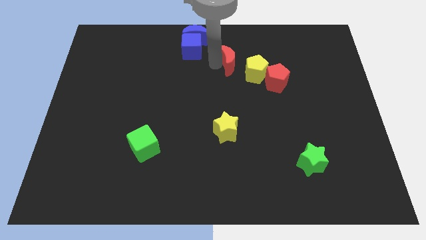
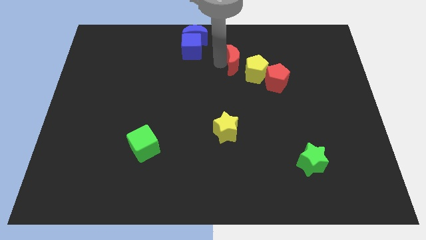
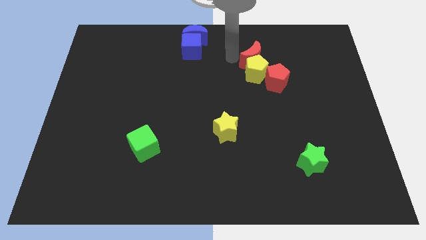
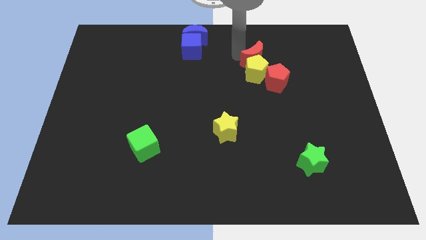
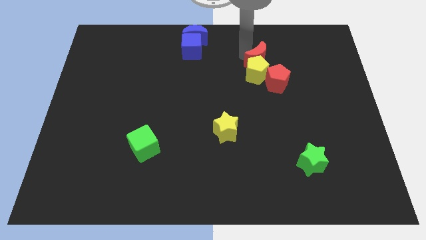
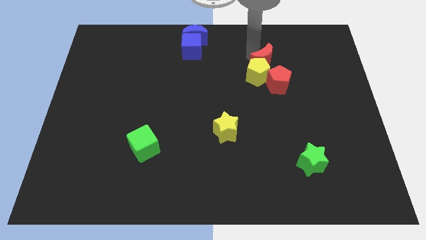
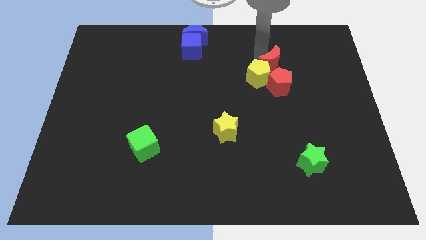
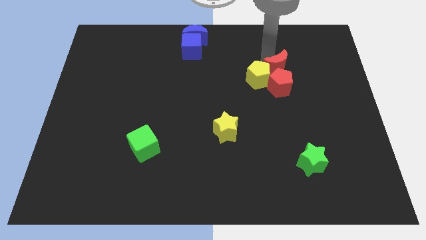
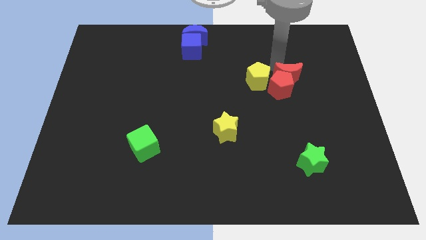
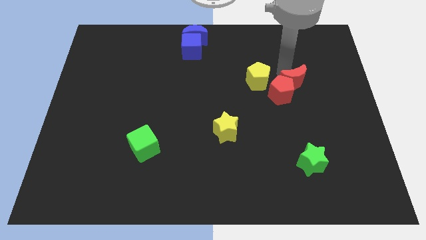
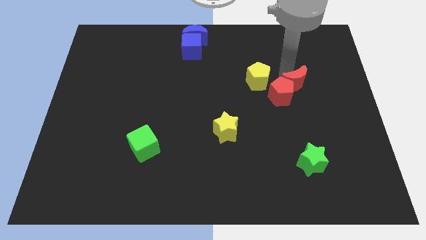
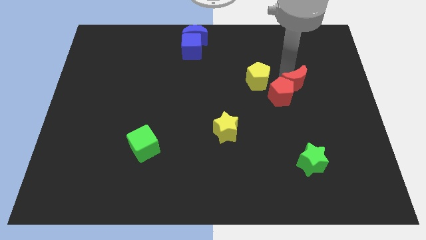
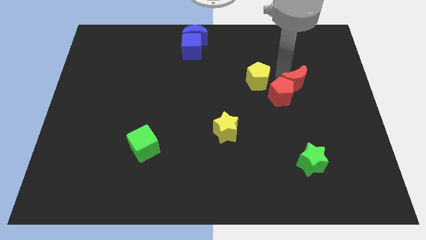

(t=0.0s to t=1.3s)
place the red crescent close to red pentagon

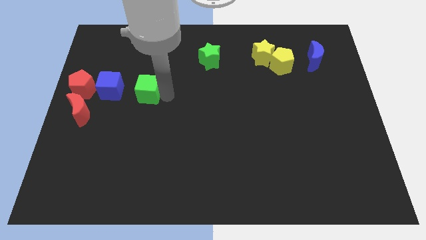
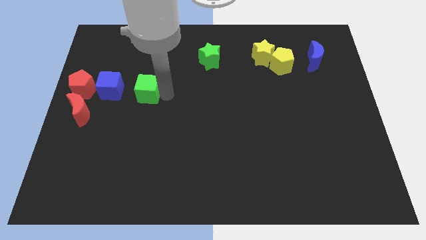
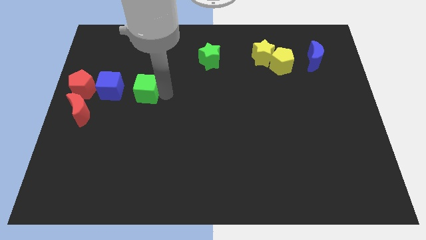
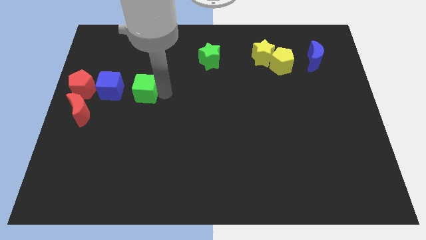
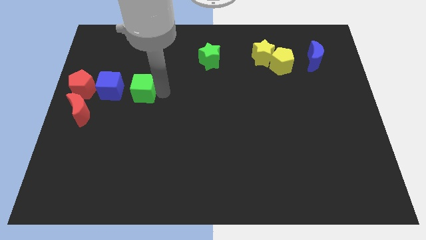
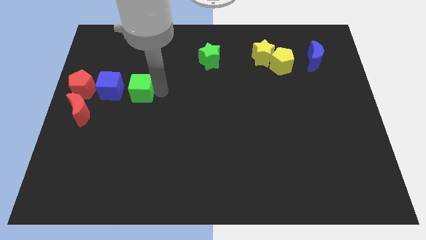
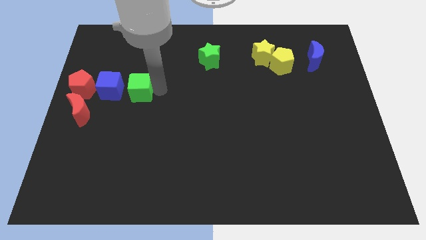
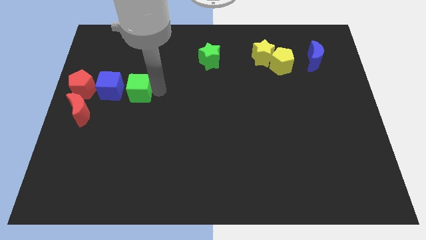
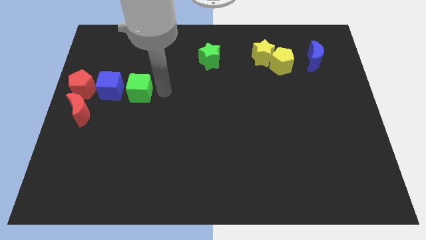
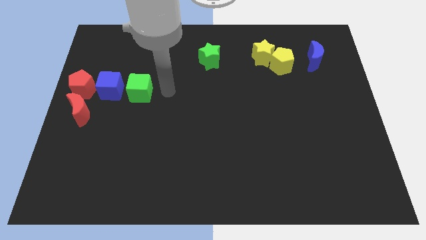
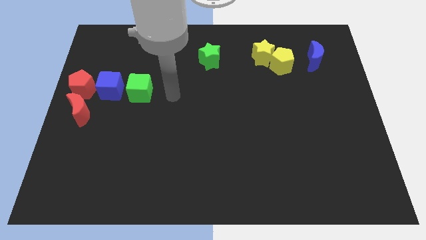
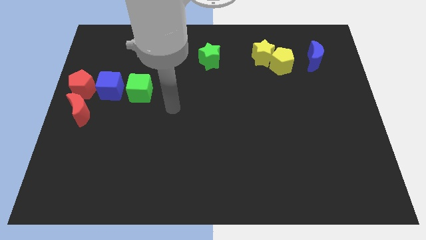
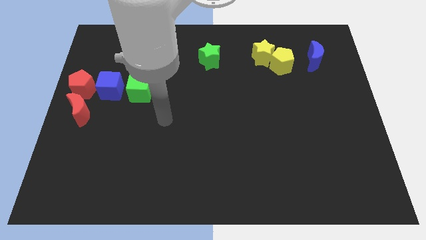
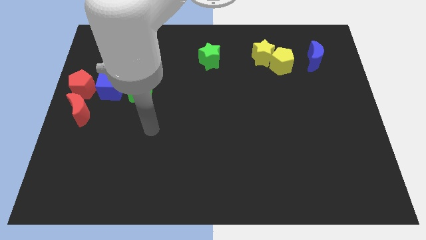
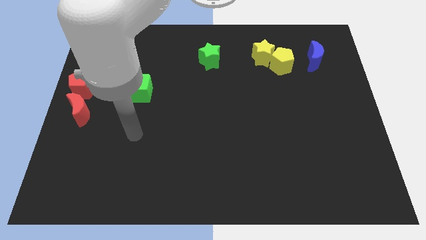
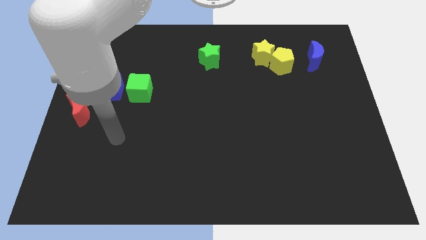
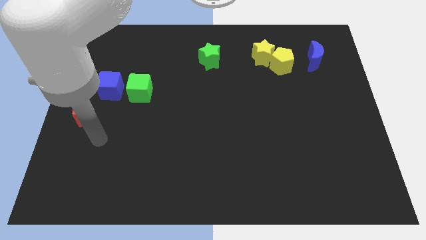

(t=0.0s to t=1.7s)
place green cube left to the blue cube

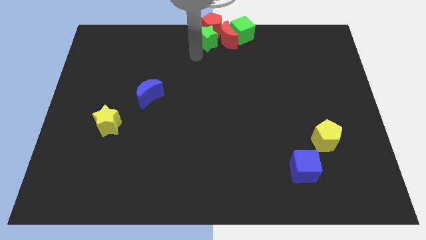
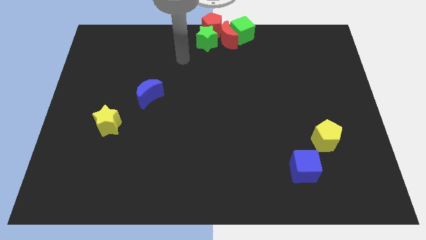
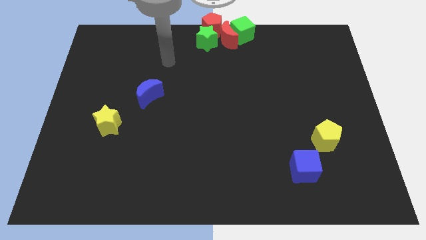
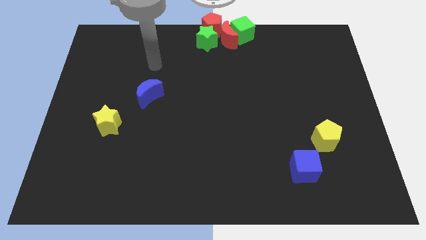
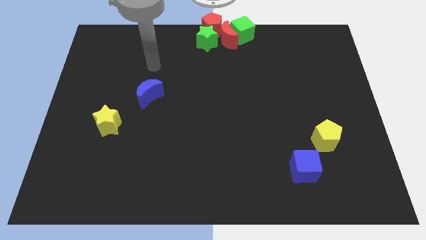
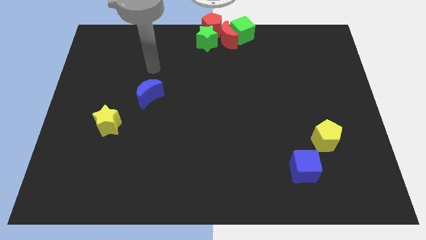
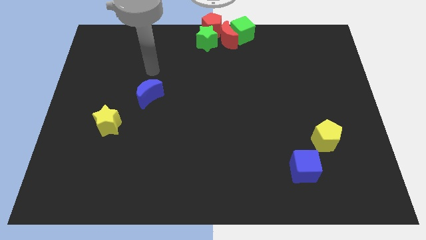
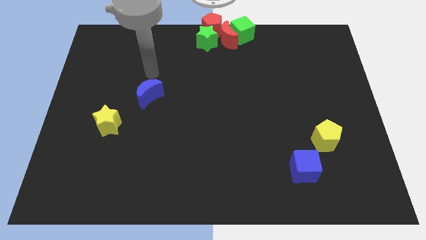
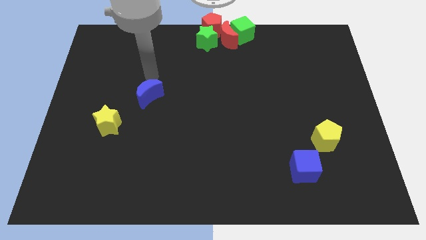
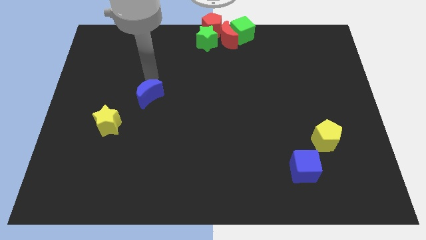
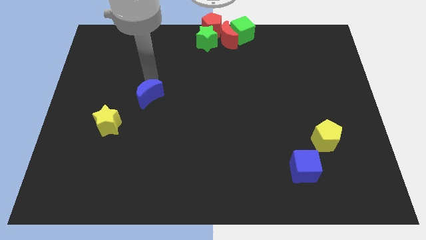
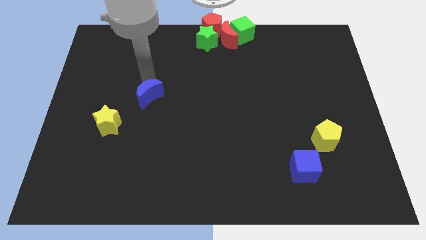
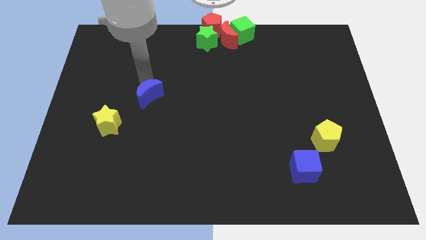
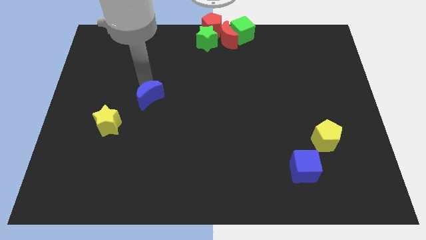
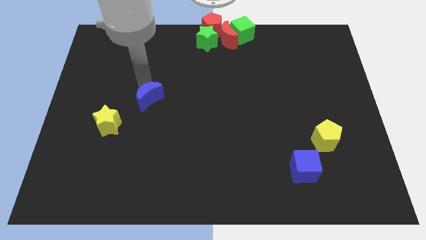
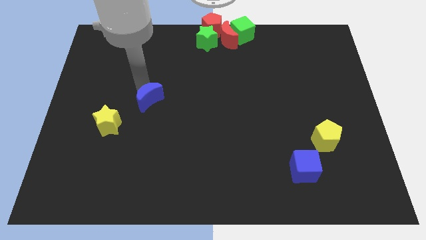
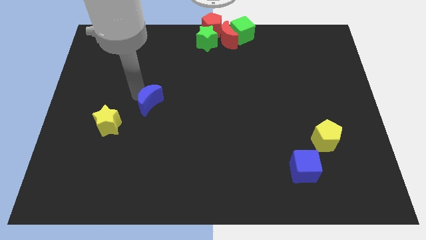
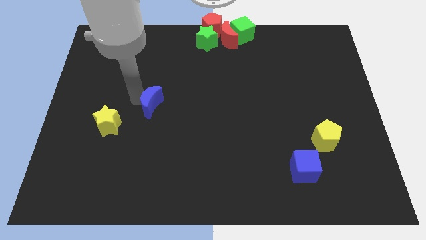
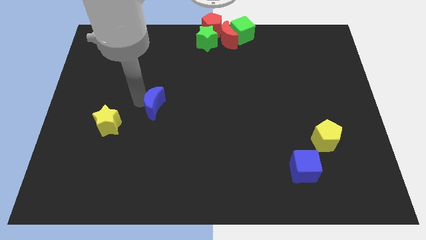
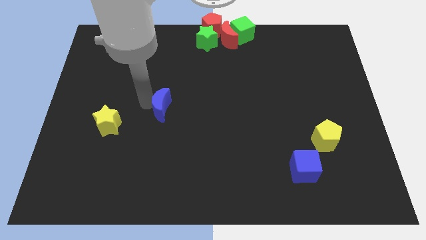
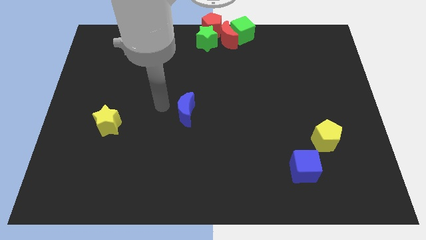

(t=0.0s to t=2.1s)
move the blue crescent to center of the board

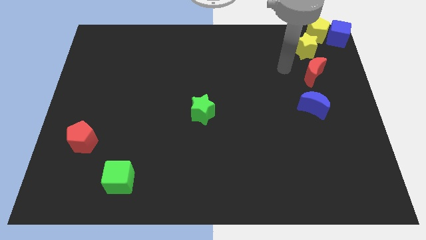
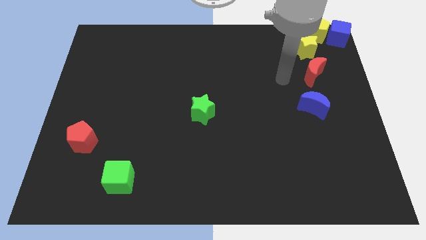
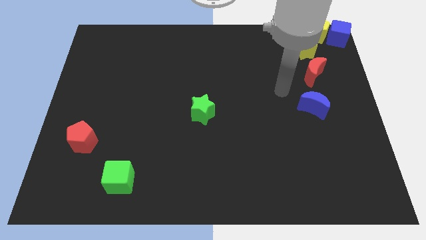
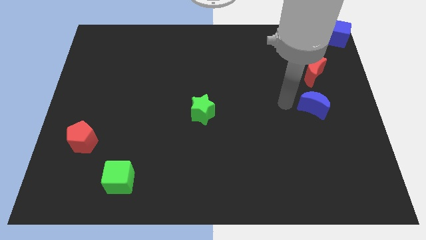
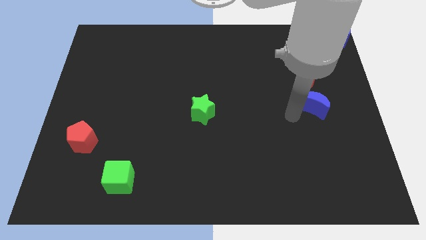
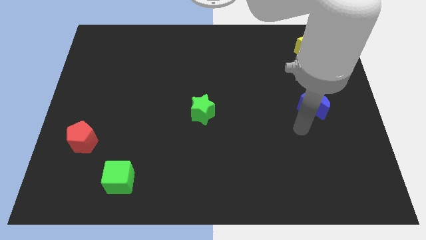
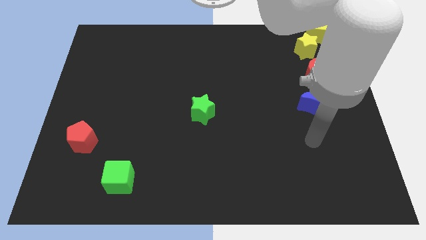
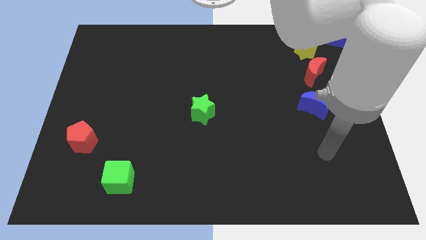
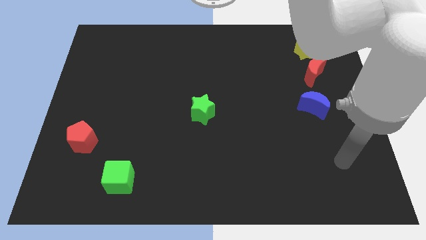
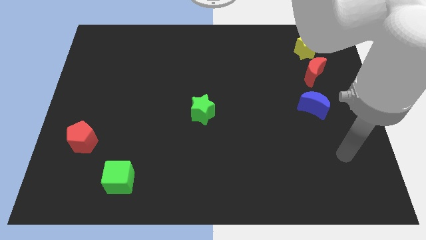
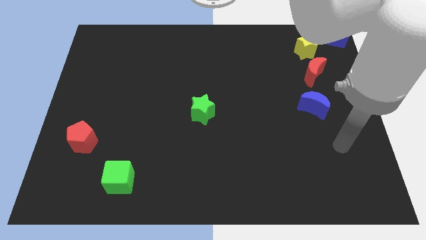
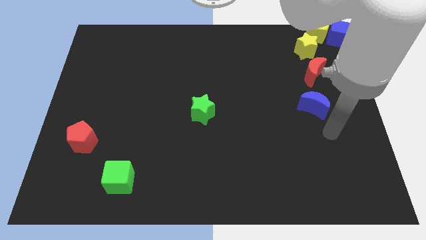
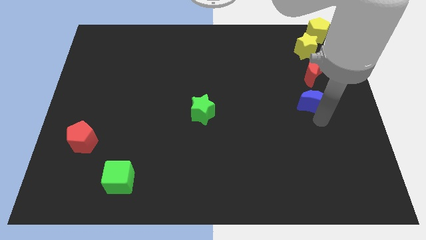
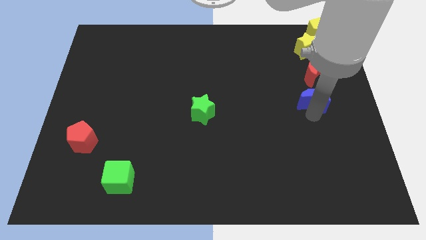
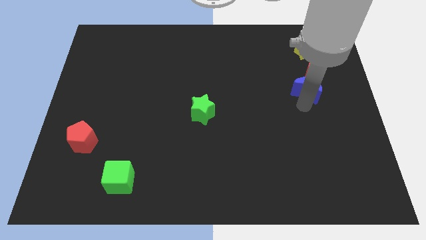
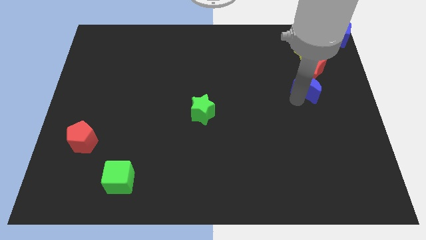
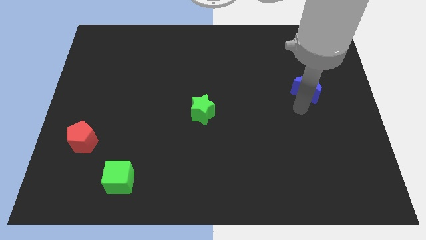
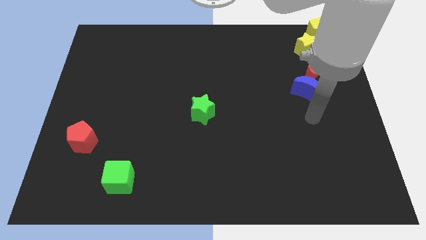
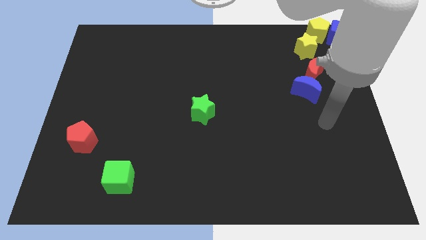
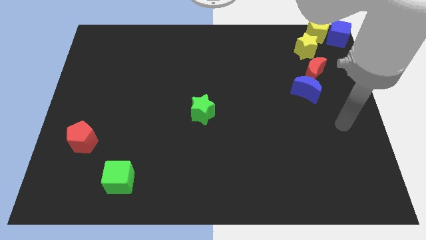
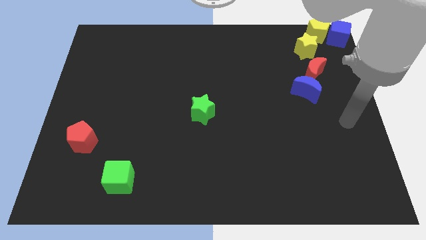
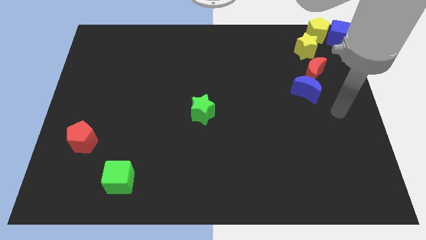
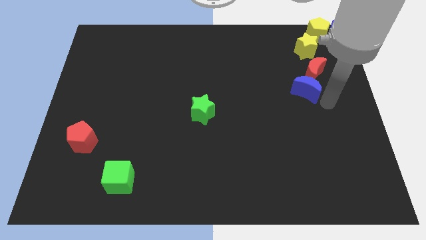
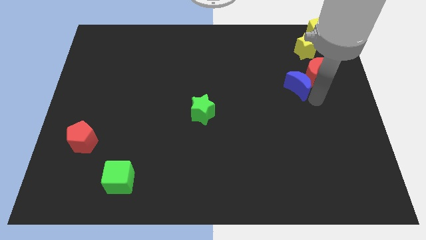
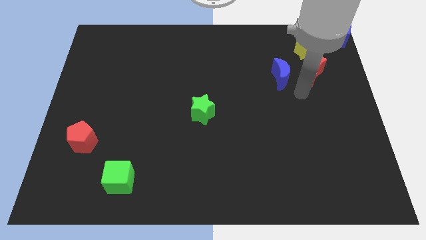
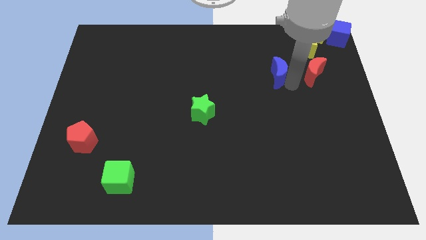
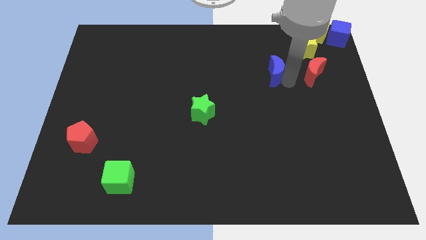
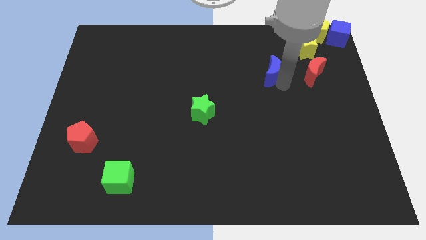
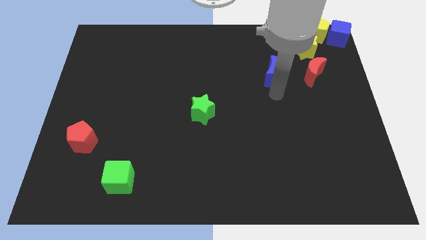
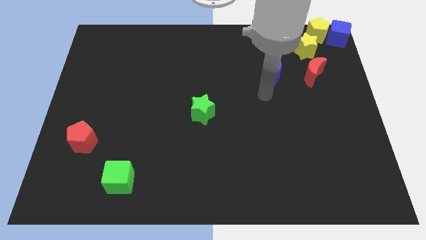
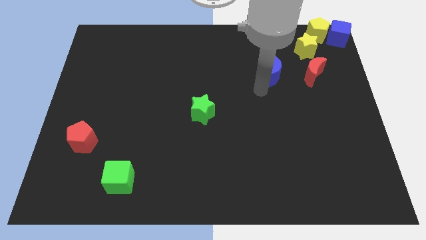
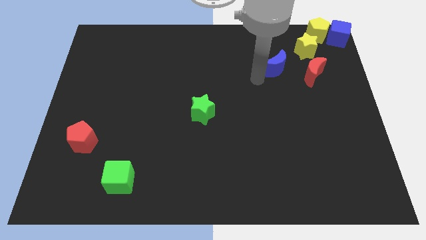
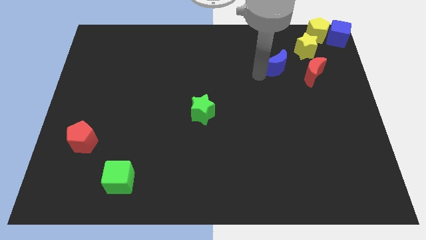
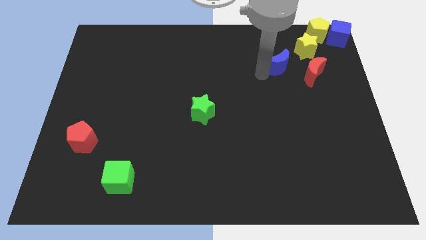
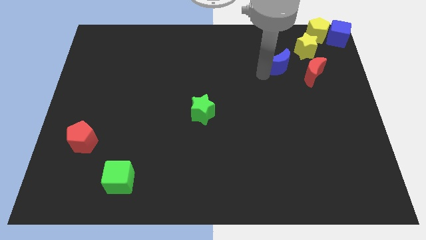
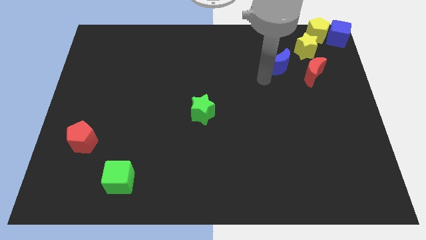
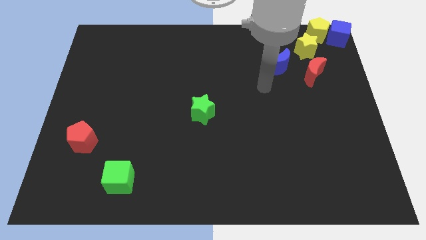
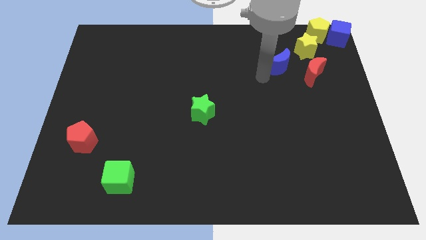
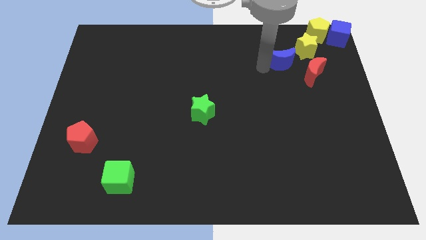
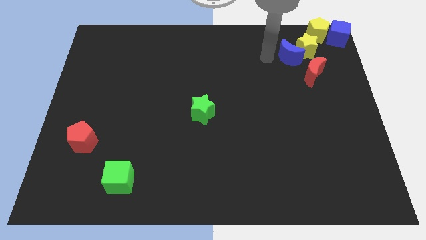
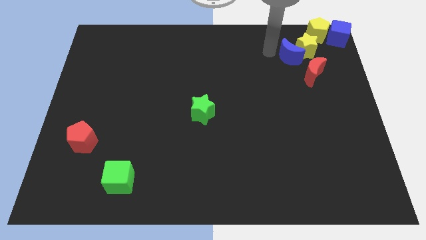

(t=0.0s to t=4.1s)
put blue moon at bottom left to yellow star
